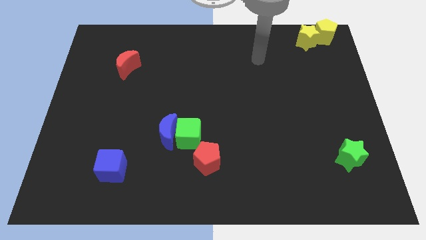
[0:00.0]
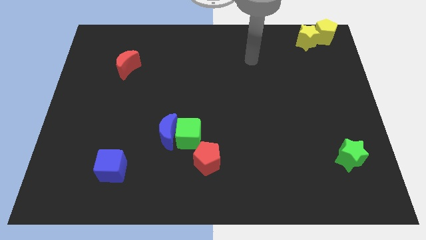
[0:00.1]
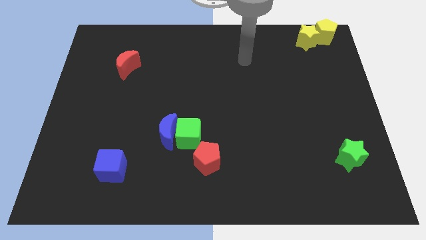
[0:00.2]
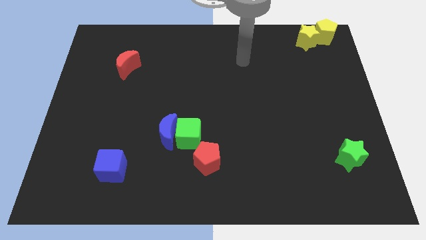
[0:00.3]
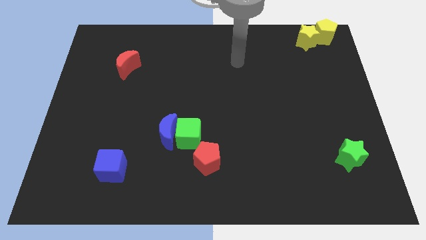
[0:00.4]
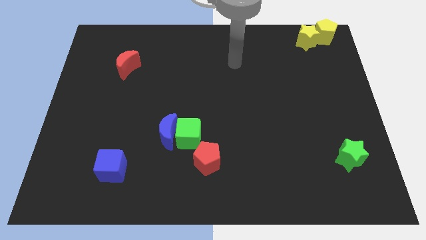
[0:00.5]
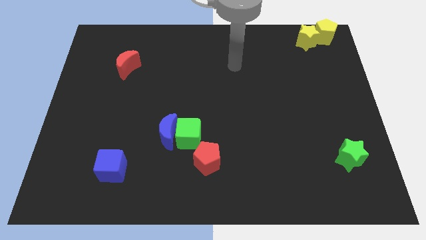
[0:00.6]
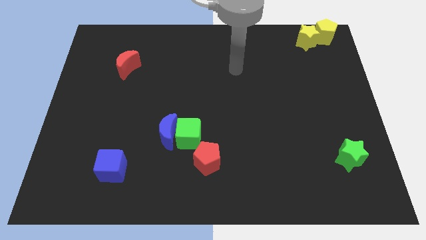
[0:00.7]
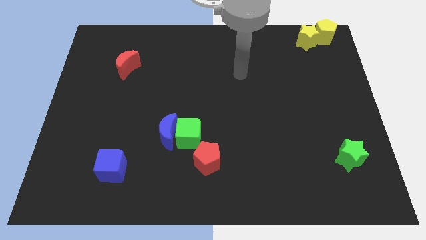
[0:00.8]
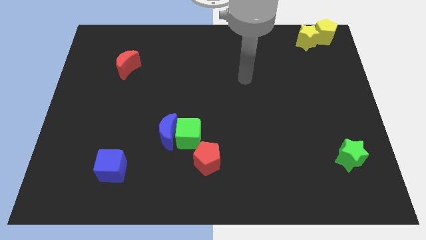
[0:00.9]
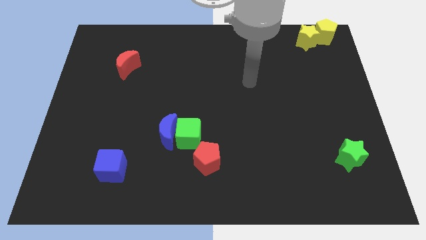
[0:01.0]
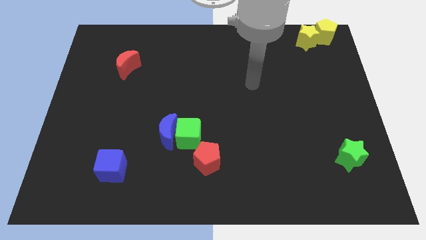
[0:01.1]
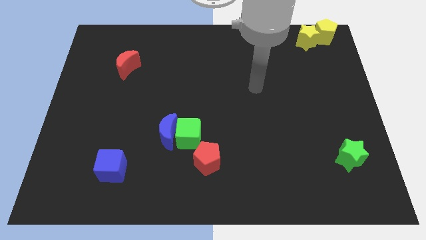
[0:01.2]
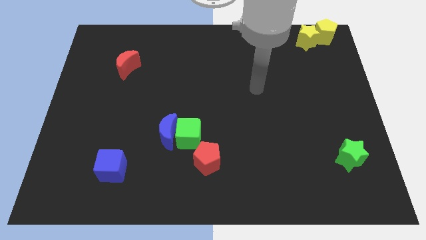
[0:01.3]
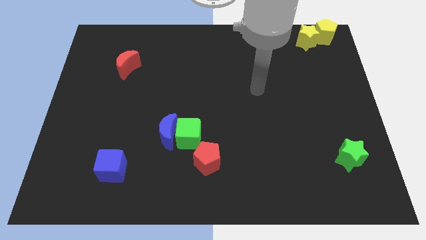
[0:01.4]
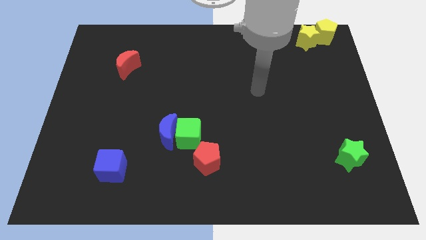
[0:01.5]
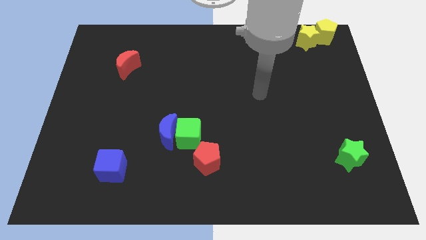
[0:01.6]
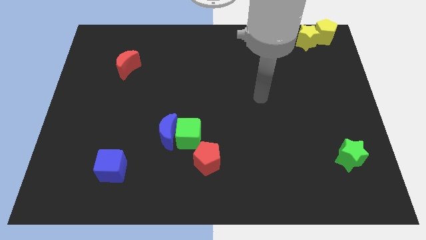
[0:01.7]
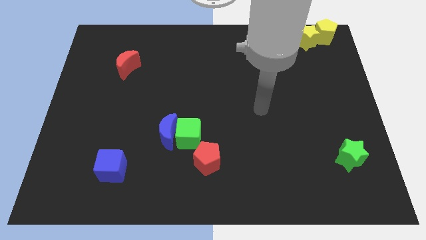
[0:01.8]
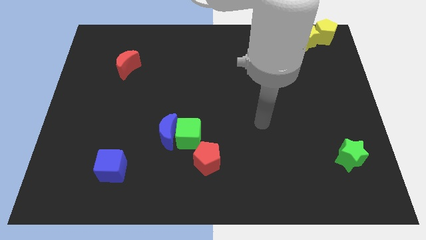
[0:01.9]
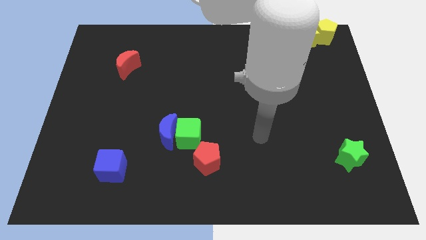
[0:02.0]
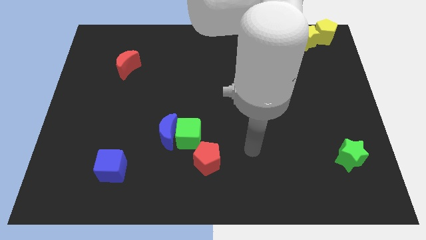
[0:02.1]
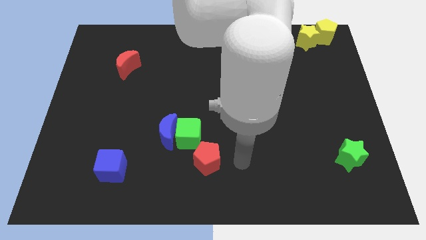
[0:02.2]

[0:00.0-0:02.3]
move your arm and point to the right of red moon

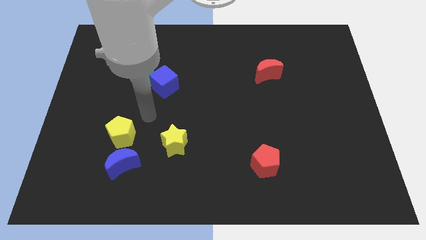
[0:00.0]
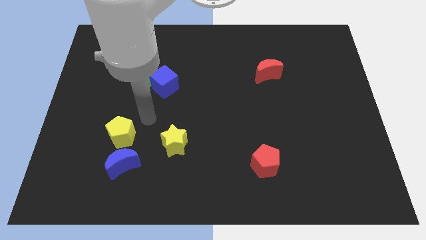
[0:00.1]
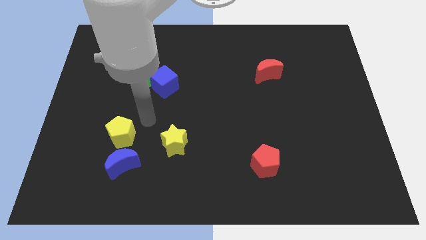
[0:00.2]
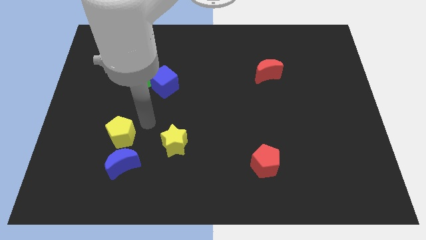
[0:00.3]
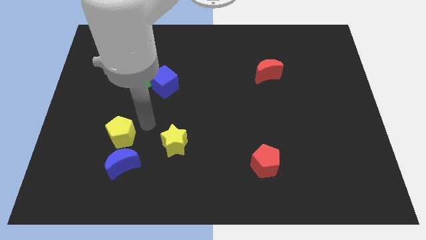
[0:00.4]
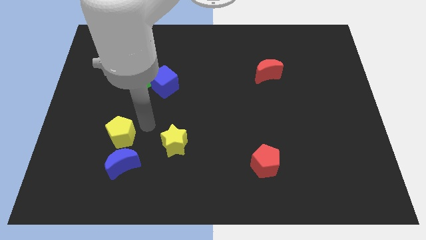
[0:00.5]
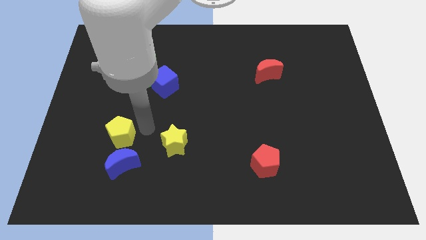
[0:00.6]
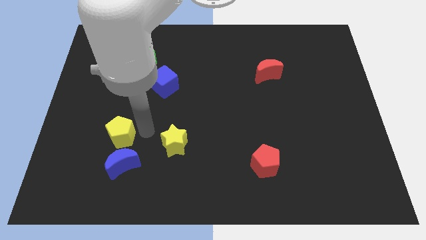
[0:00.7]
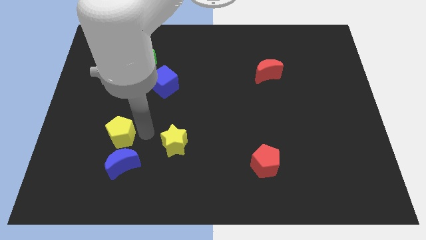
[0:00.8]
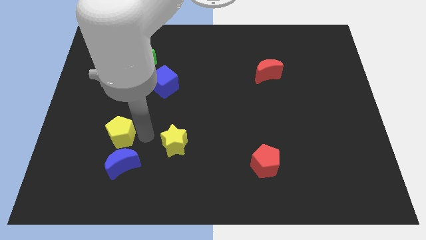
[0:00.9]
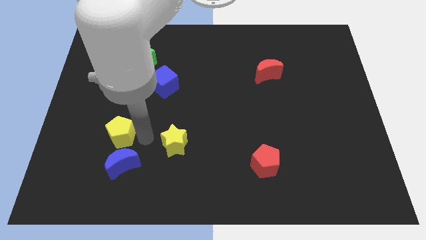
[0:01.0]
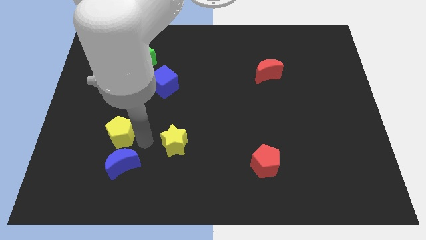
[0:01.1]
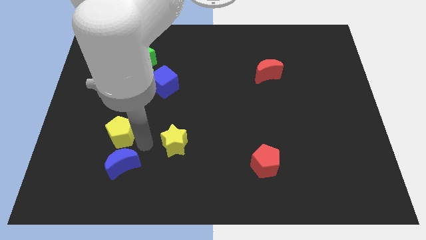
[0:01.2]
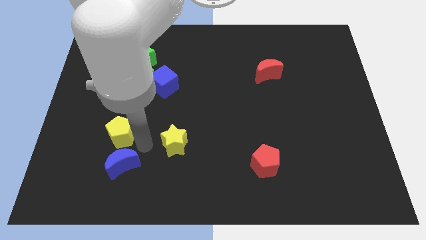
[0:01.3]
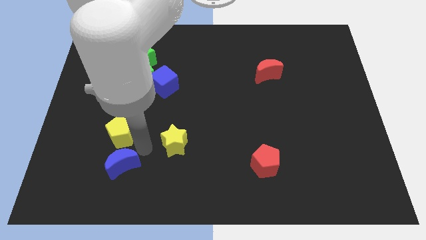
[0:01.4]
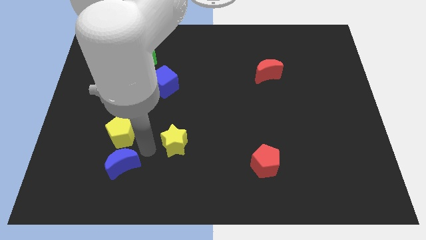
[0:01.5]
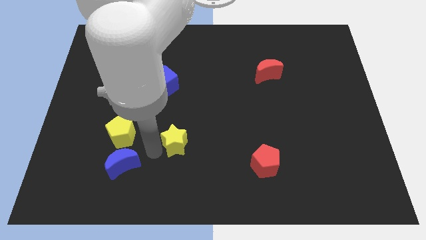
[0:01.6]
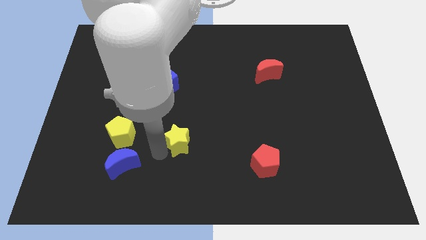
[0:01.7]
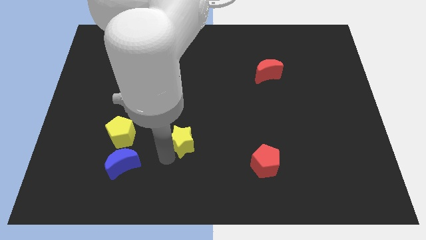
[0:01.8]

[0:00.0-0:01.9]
place your hand to touch the left side of the yellow star

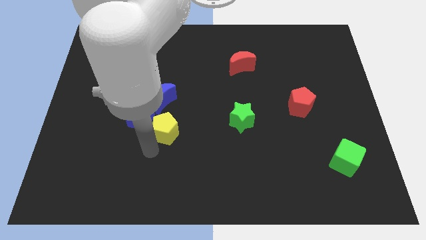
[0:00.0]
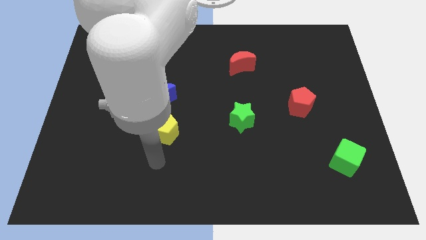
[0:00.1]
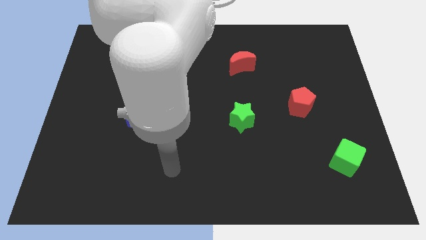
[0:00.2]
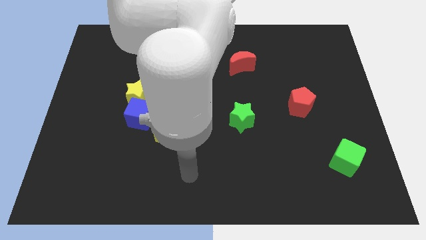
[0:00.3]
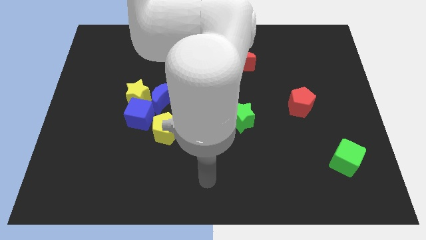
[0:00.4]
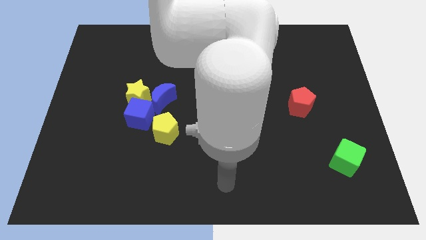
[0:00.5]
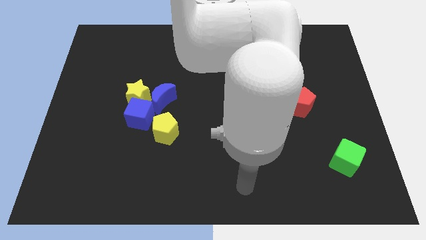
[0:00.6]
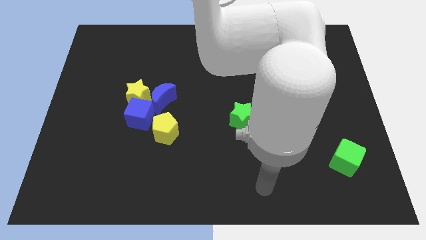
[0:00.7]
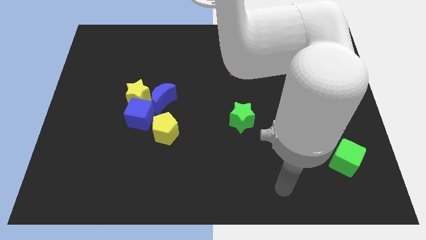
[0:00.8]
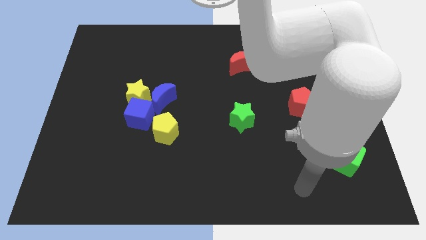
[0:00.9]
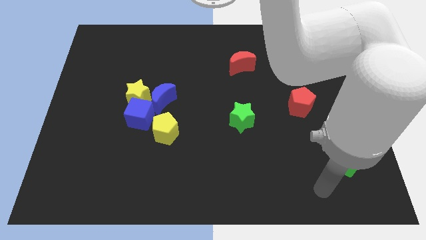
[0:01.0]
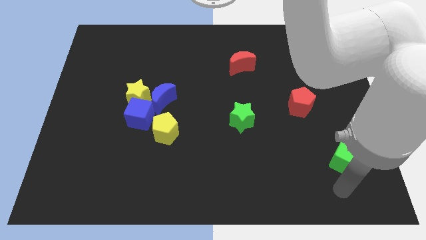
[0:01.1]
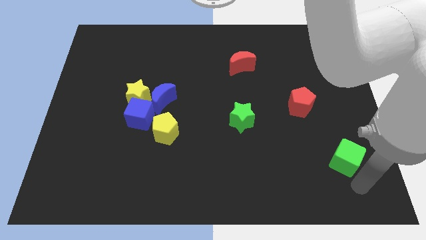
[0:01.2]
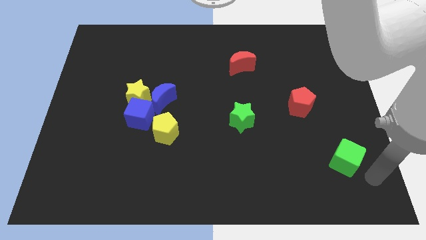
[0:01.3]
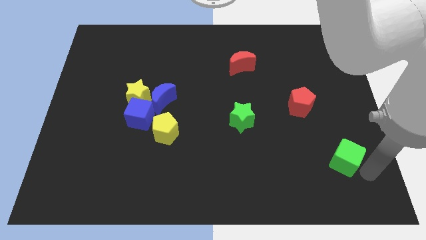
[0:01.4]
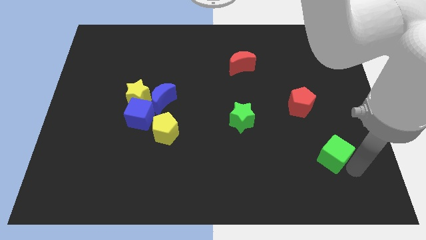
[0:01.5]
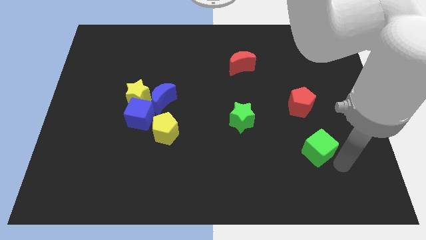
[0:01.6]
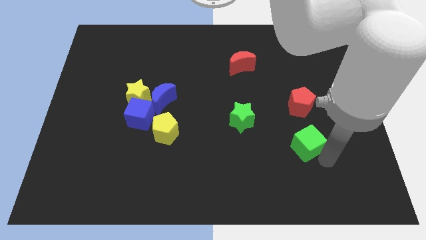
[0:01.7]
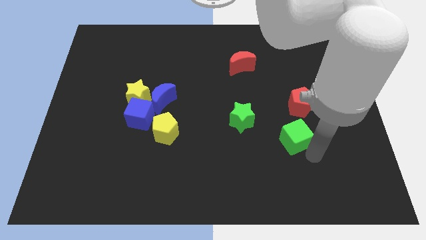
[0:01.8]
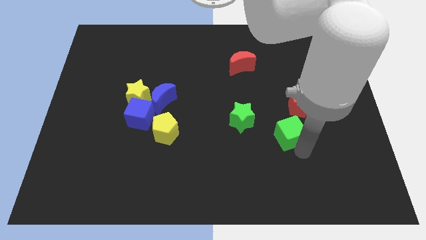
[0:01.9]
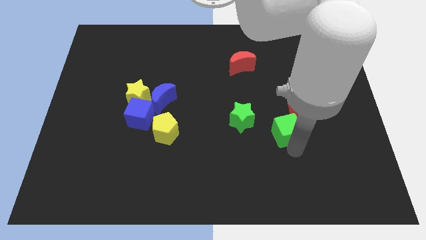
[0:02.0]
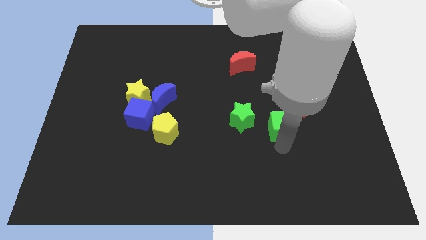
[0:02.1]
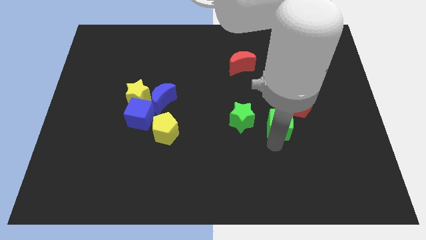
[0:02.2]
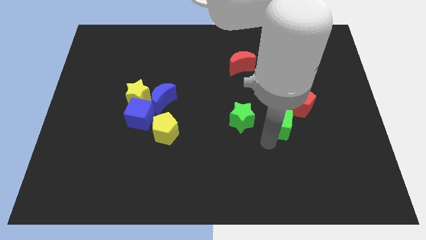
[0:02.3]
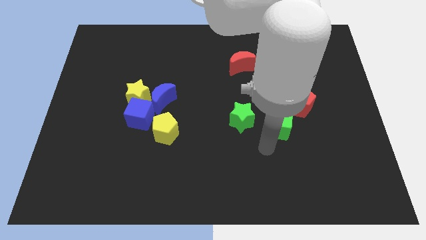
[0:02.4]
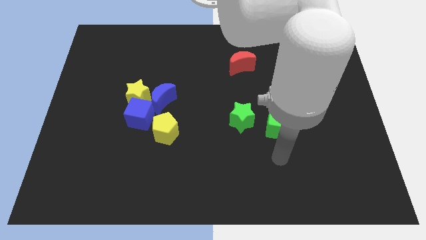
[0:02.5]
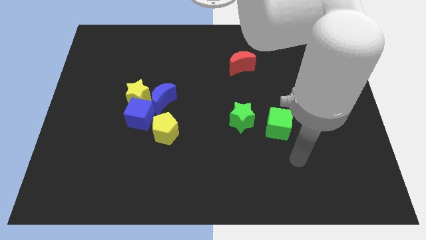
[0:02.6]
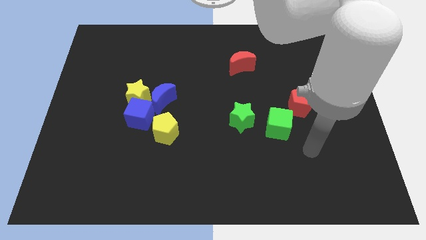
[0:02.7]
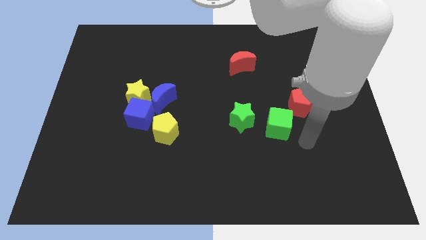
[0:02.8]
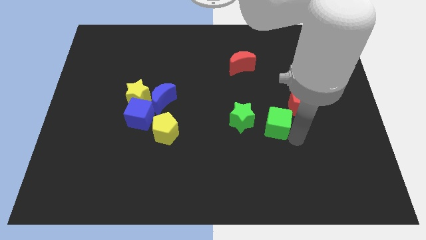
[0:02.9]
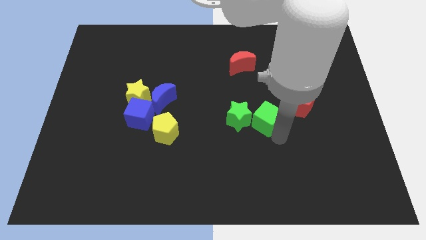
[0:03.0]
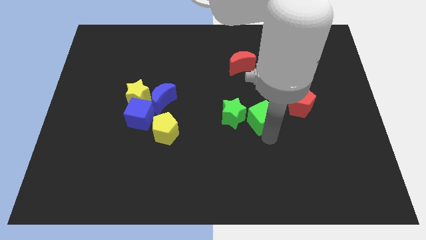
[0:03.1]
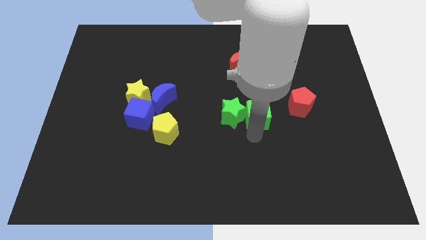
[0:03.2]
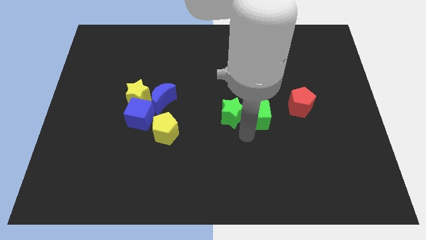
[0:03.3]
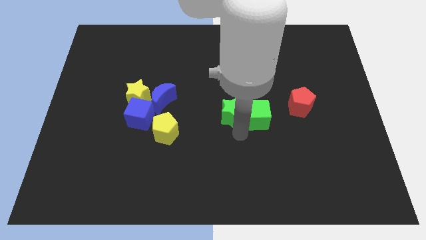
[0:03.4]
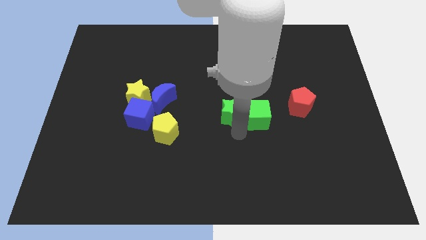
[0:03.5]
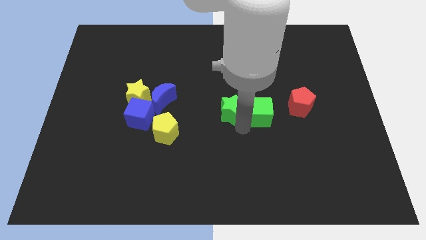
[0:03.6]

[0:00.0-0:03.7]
place green cube to the right side of the green star

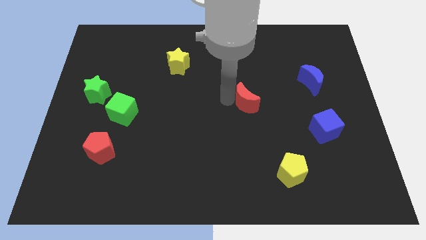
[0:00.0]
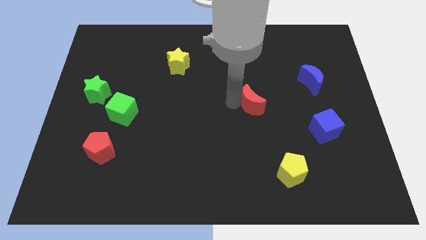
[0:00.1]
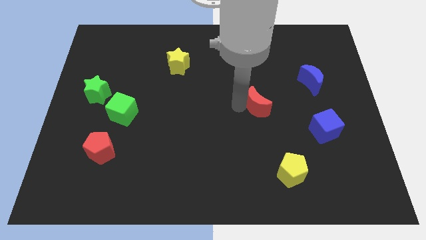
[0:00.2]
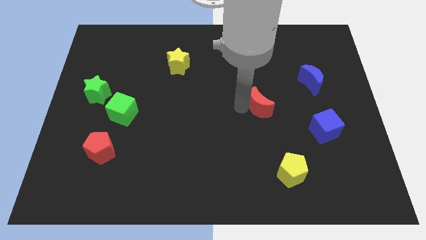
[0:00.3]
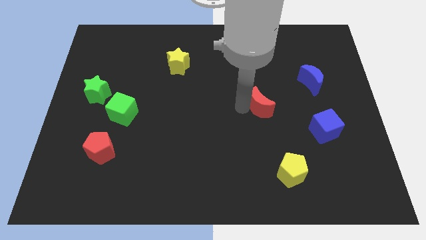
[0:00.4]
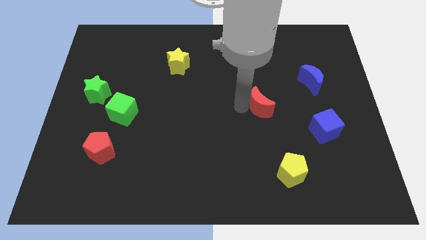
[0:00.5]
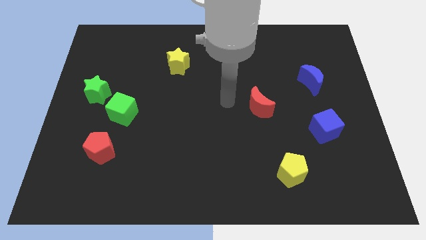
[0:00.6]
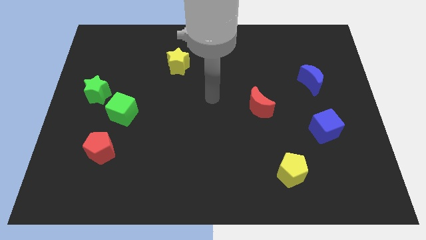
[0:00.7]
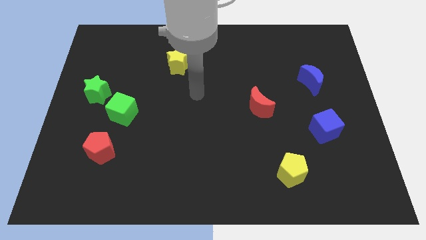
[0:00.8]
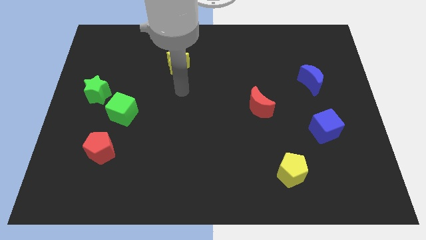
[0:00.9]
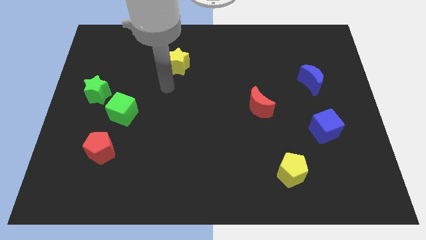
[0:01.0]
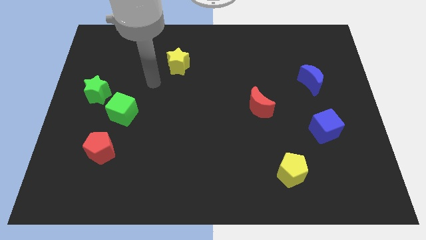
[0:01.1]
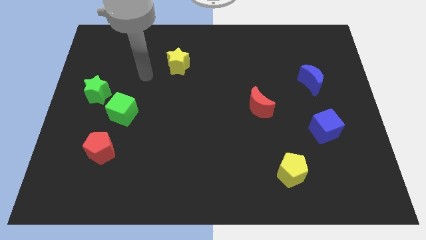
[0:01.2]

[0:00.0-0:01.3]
slide the red moon slightly to the right
